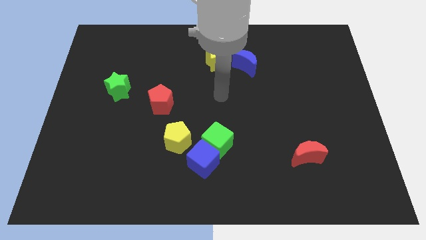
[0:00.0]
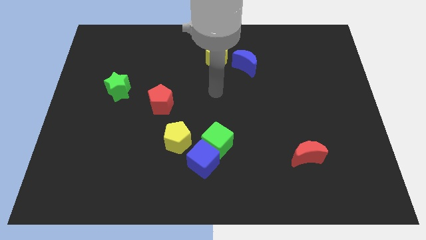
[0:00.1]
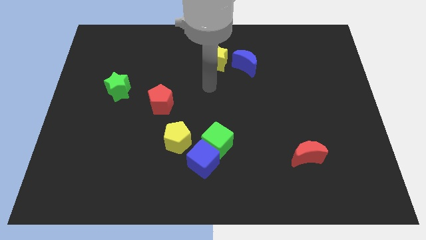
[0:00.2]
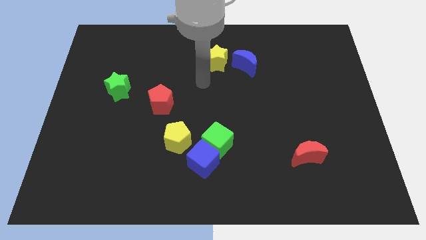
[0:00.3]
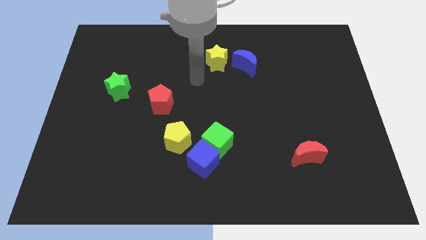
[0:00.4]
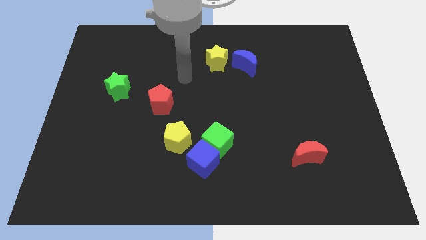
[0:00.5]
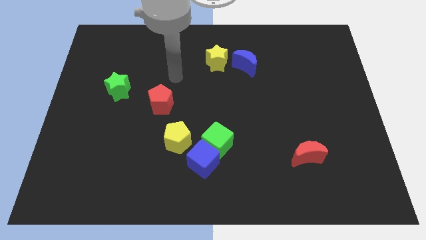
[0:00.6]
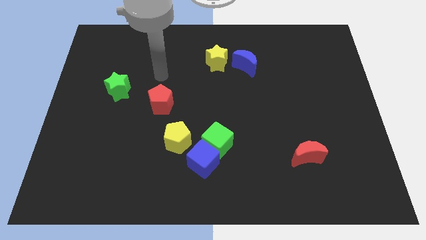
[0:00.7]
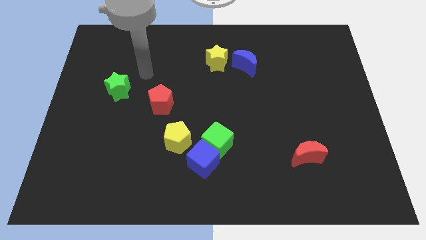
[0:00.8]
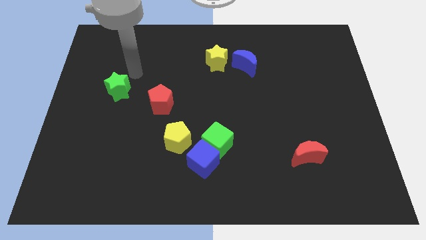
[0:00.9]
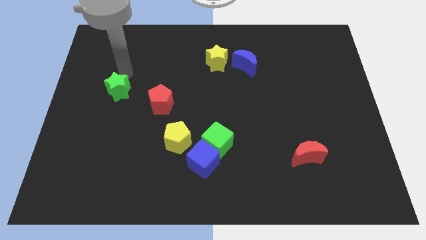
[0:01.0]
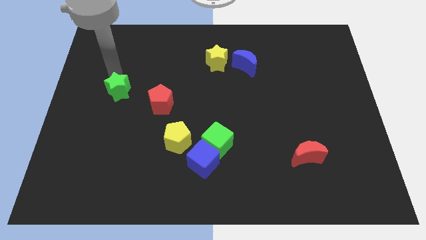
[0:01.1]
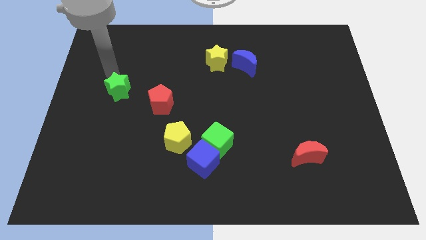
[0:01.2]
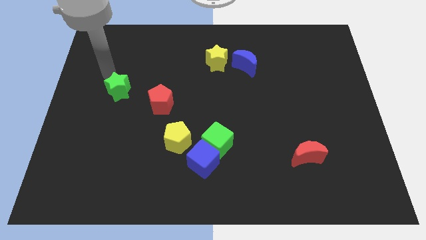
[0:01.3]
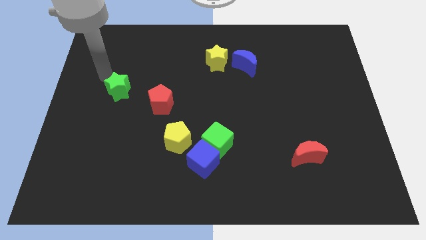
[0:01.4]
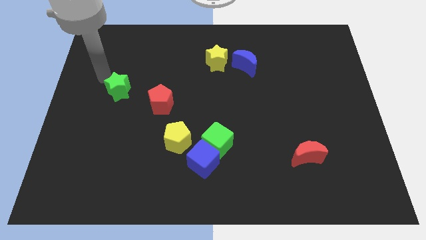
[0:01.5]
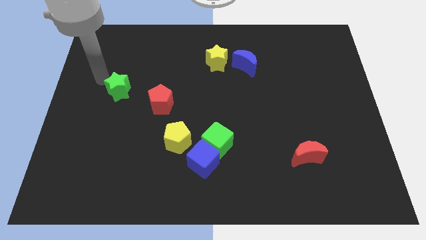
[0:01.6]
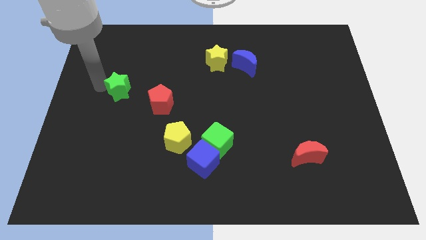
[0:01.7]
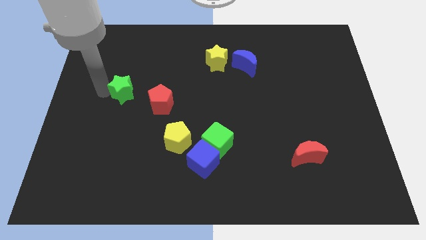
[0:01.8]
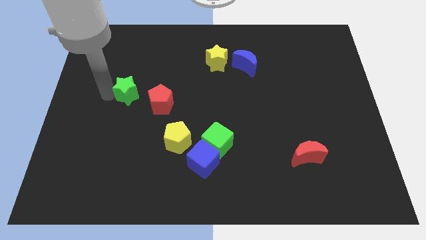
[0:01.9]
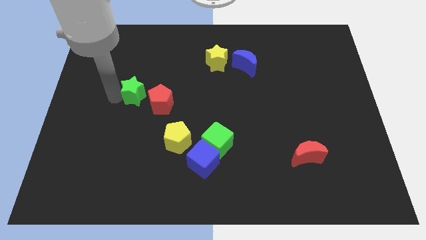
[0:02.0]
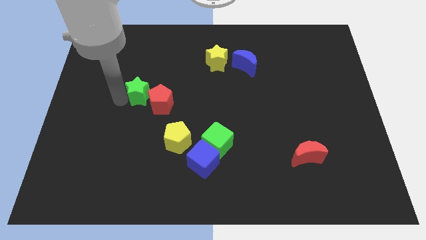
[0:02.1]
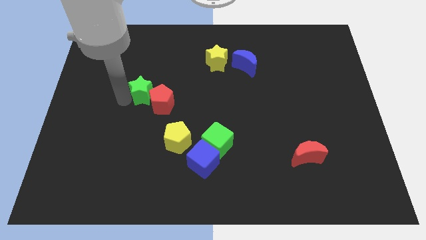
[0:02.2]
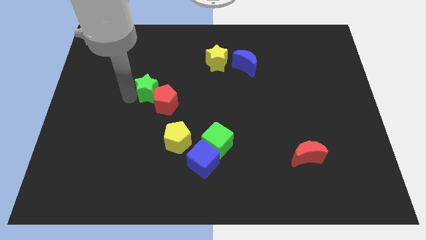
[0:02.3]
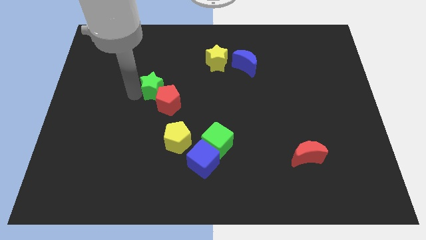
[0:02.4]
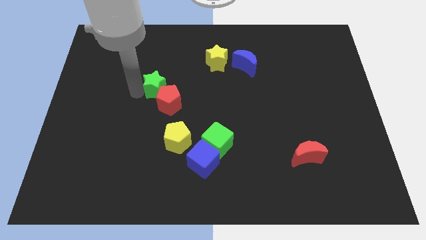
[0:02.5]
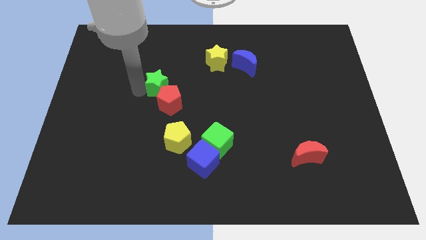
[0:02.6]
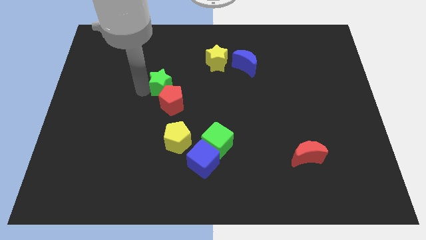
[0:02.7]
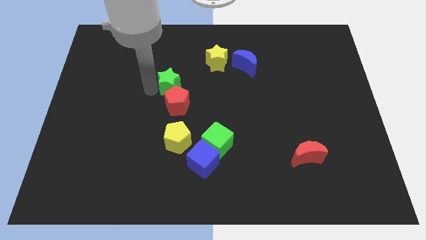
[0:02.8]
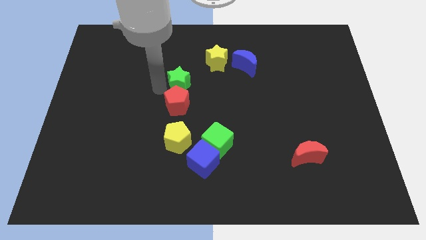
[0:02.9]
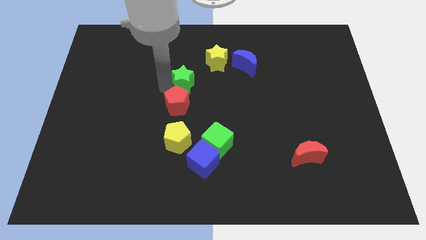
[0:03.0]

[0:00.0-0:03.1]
place green star above red pentagon

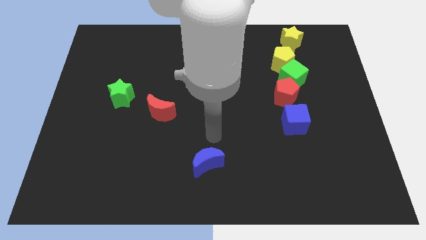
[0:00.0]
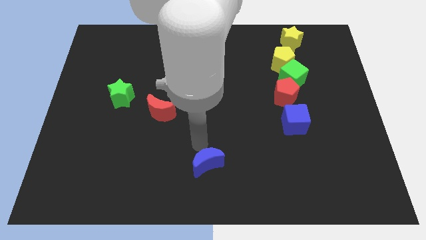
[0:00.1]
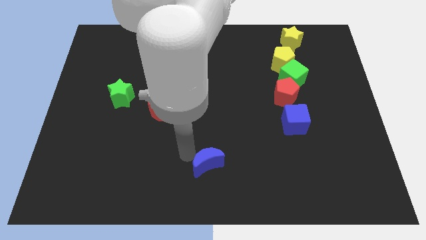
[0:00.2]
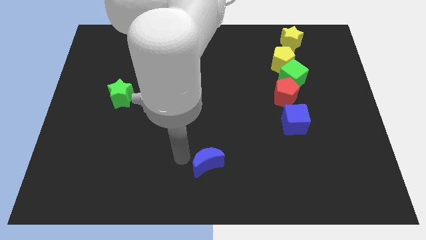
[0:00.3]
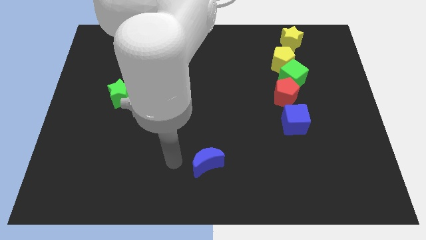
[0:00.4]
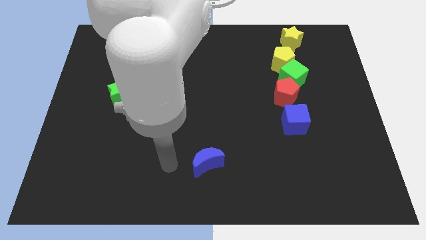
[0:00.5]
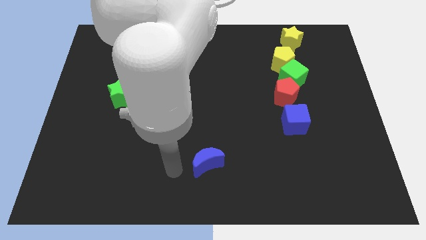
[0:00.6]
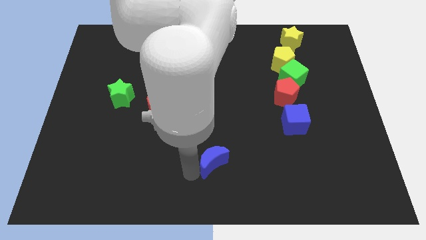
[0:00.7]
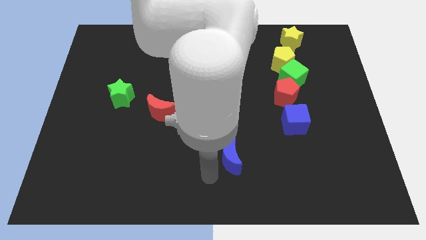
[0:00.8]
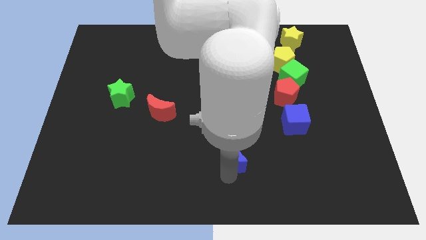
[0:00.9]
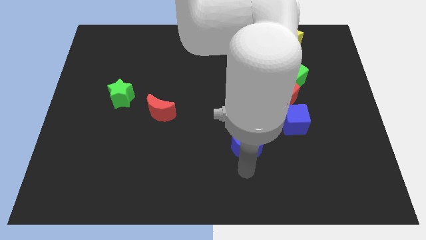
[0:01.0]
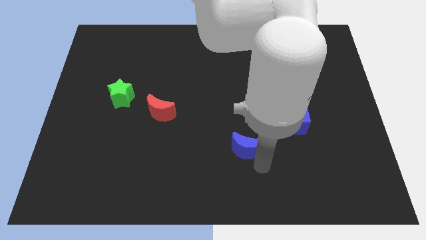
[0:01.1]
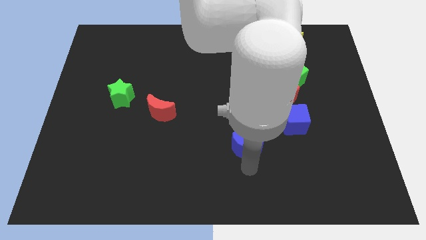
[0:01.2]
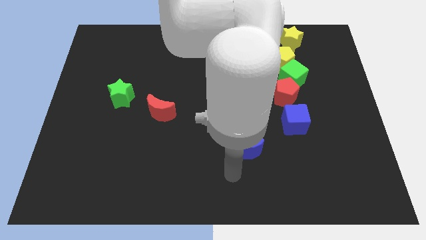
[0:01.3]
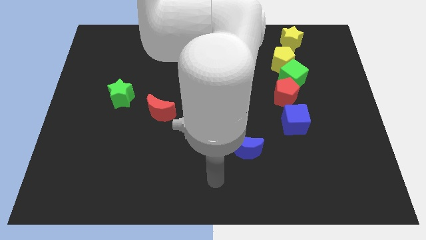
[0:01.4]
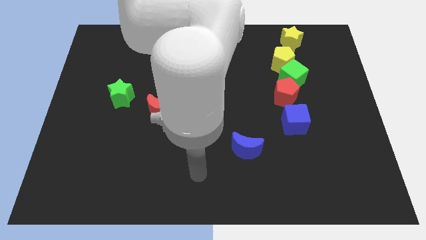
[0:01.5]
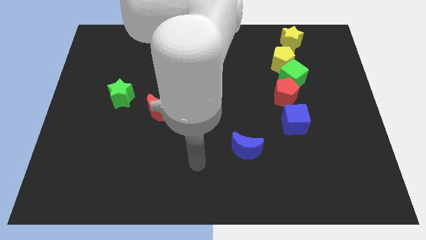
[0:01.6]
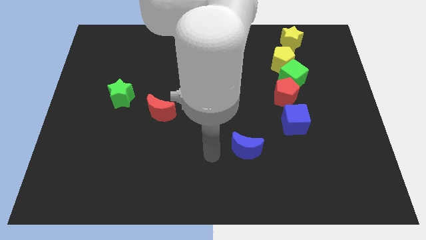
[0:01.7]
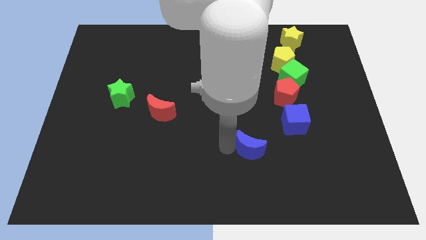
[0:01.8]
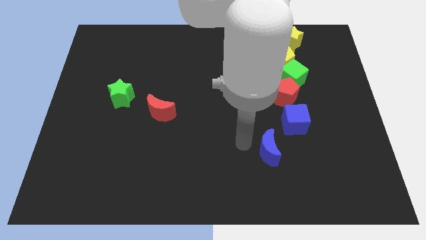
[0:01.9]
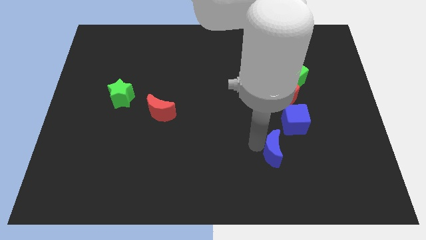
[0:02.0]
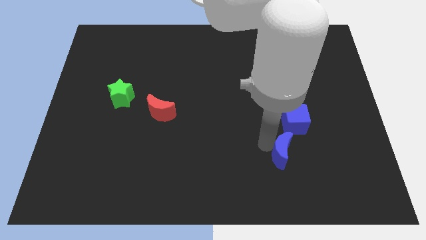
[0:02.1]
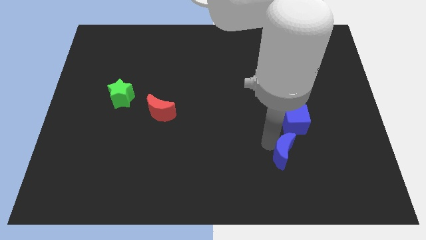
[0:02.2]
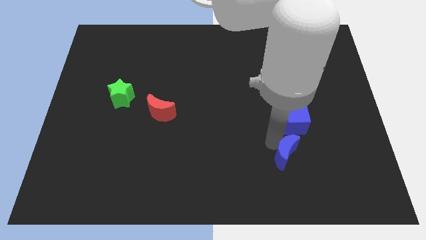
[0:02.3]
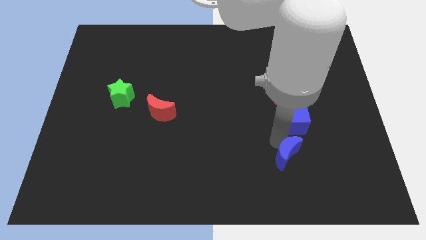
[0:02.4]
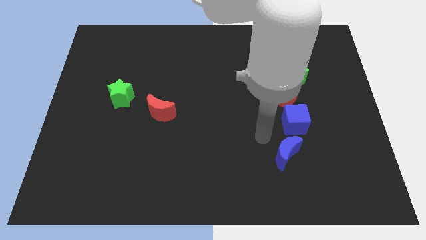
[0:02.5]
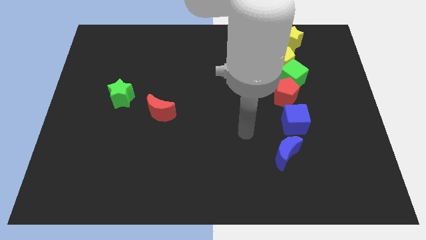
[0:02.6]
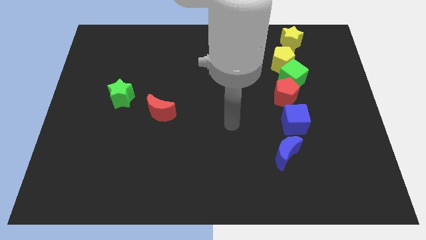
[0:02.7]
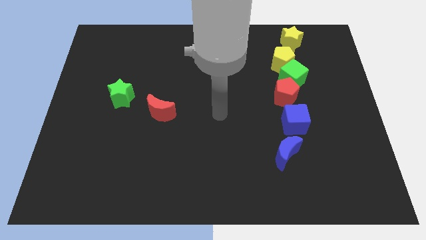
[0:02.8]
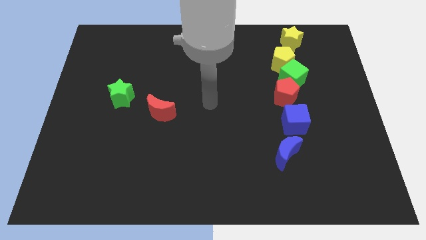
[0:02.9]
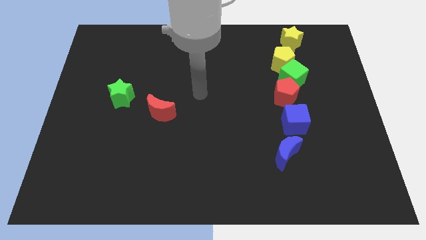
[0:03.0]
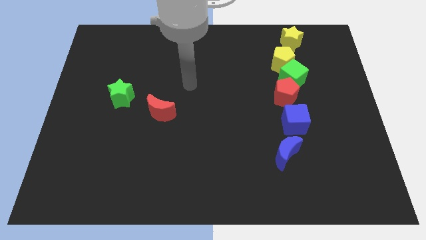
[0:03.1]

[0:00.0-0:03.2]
move the blue moon to the bottom of the blue cube

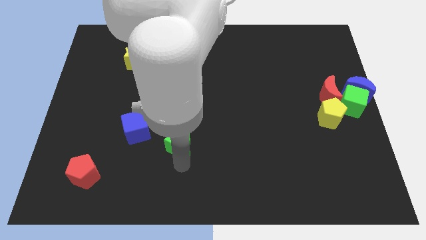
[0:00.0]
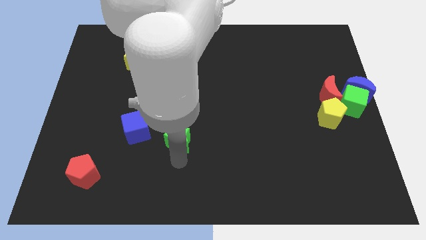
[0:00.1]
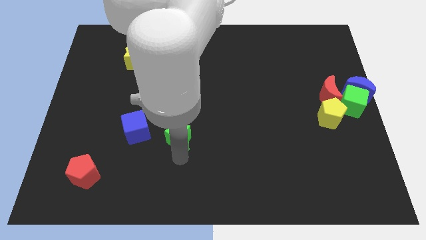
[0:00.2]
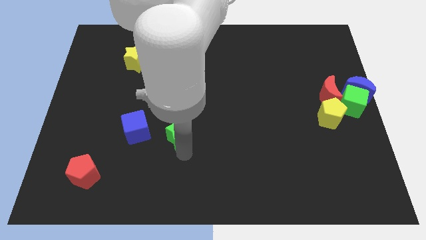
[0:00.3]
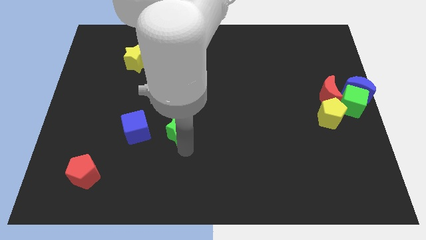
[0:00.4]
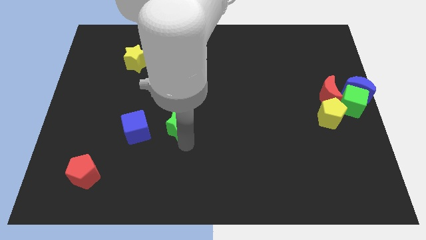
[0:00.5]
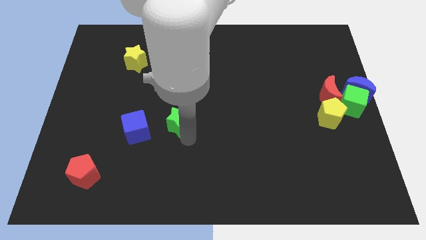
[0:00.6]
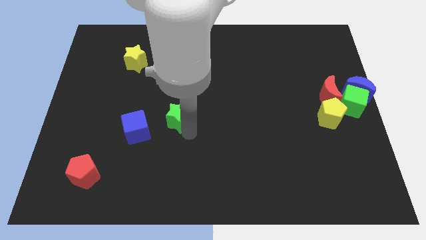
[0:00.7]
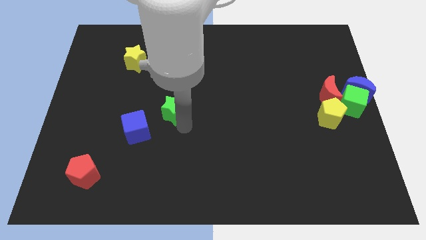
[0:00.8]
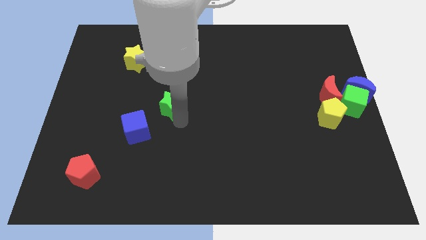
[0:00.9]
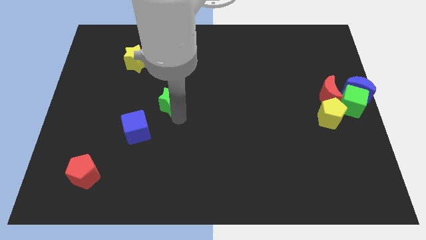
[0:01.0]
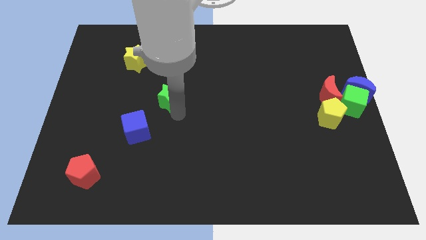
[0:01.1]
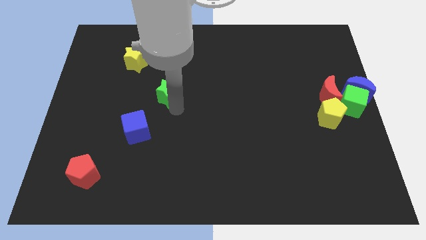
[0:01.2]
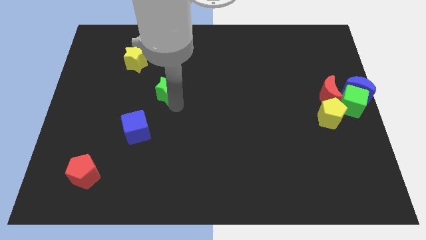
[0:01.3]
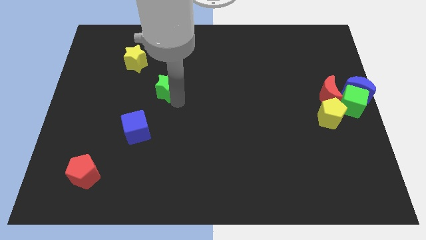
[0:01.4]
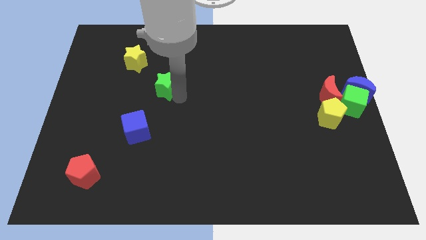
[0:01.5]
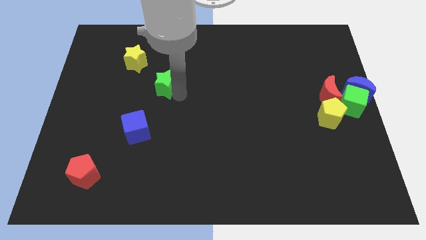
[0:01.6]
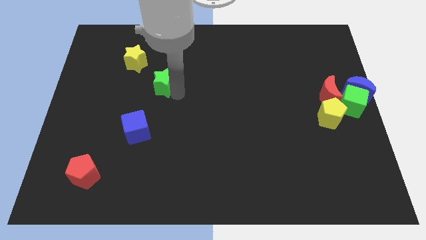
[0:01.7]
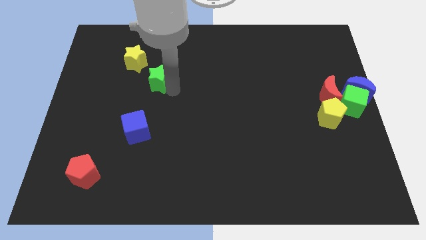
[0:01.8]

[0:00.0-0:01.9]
drag the green star towards top left

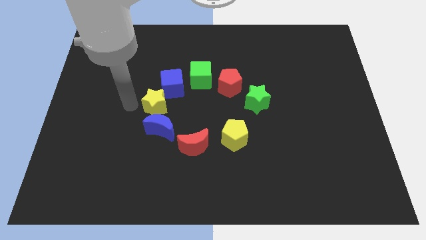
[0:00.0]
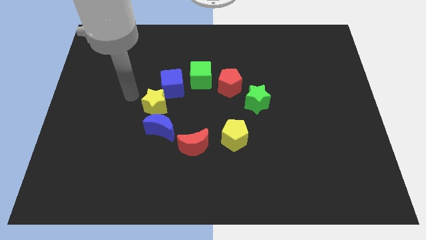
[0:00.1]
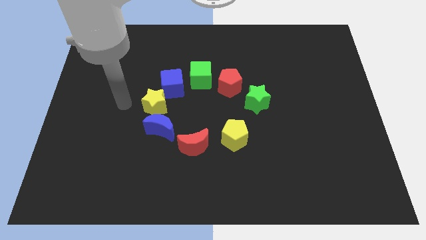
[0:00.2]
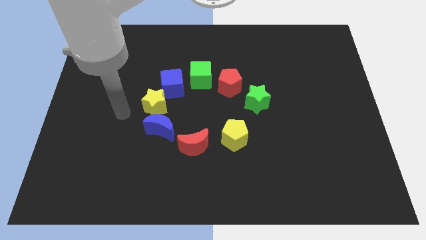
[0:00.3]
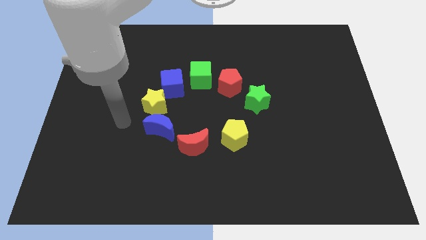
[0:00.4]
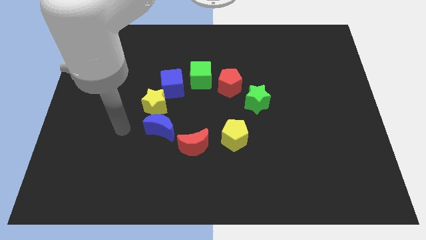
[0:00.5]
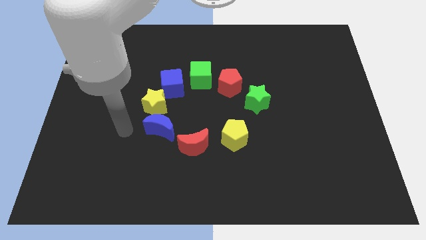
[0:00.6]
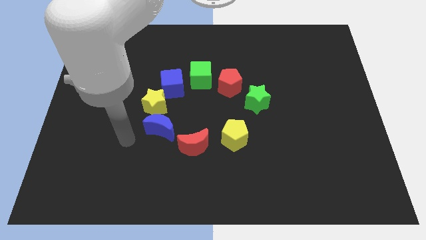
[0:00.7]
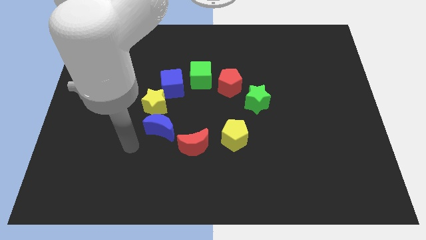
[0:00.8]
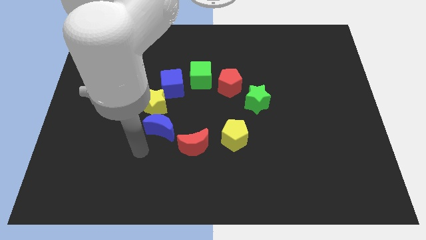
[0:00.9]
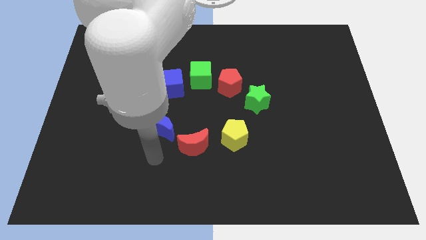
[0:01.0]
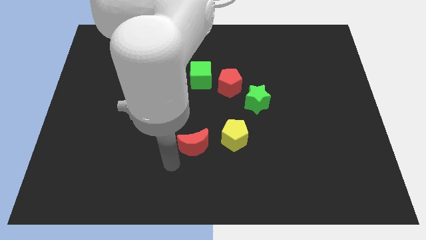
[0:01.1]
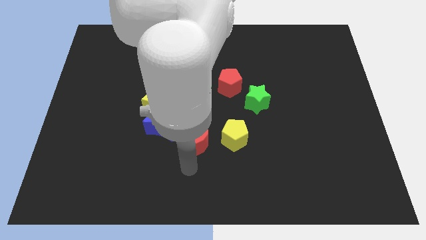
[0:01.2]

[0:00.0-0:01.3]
move the arm towards the bottom of the red crescent
